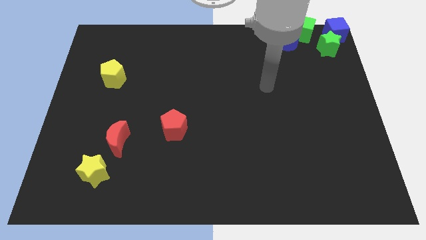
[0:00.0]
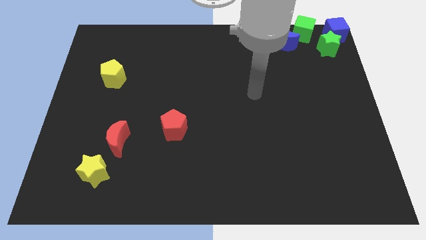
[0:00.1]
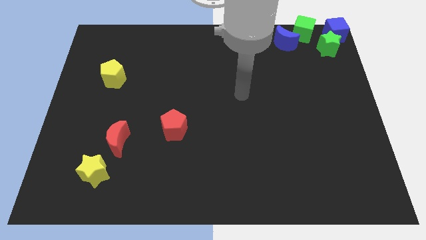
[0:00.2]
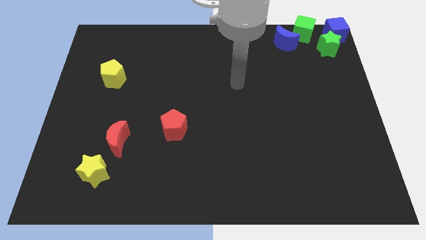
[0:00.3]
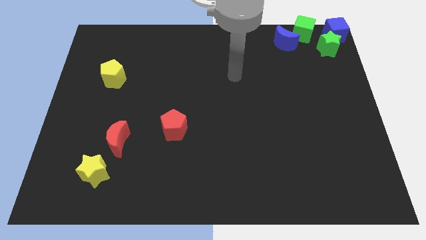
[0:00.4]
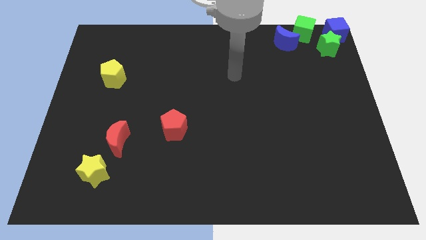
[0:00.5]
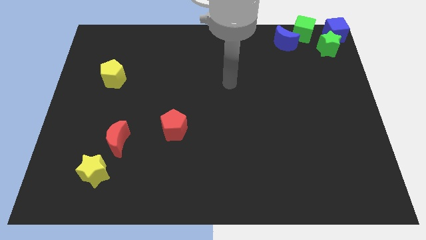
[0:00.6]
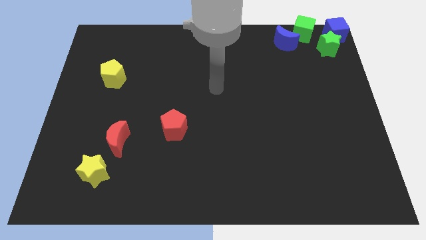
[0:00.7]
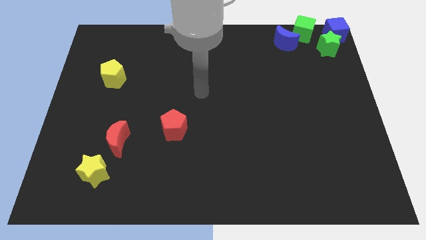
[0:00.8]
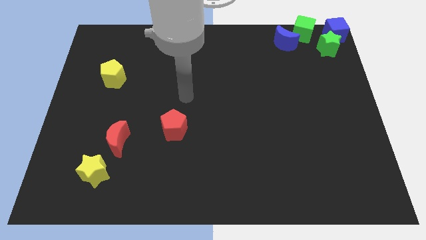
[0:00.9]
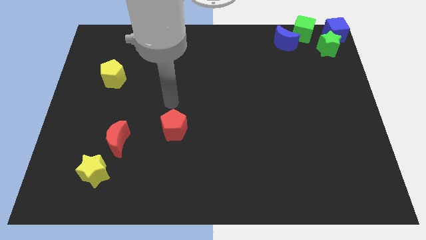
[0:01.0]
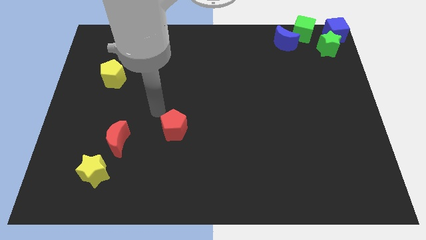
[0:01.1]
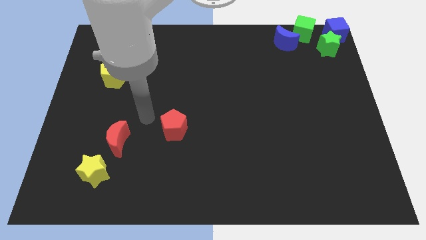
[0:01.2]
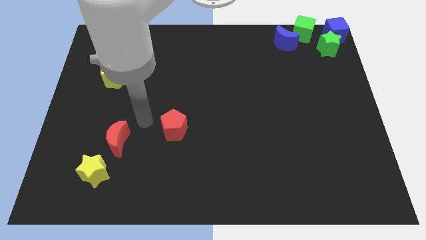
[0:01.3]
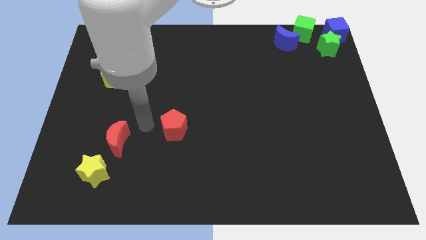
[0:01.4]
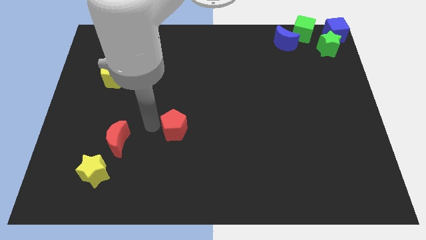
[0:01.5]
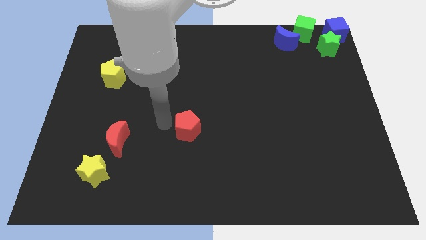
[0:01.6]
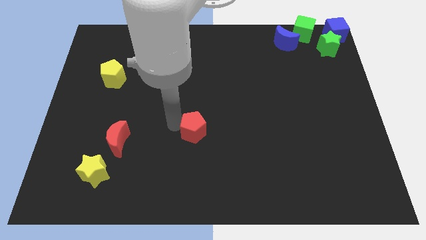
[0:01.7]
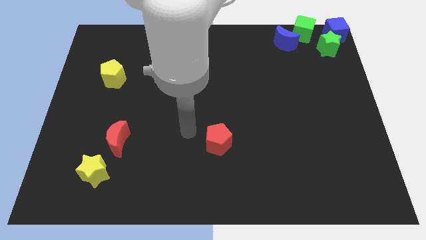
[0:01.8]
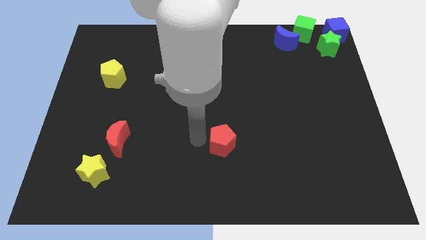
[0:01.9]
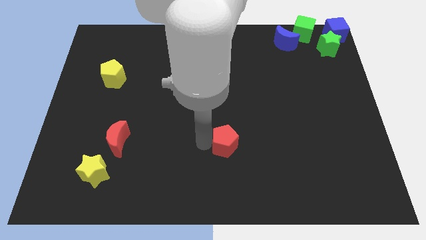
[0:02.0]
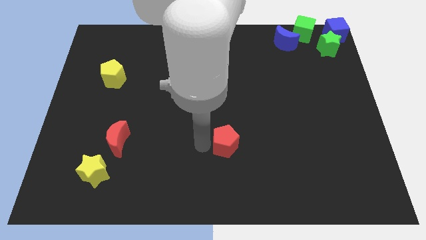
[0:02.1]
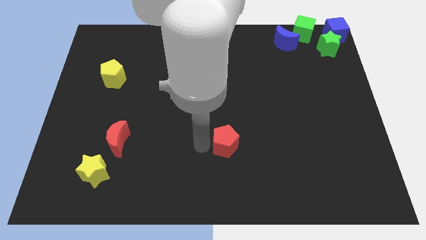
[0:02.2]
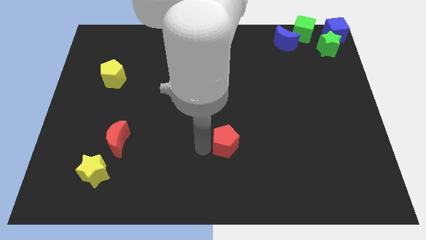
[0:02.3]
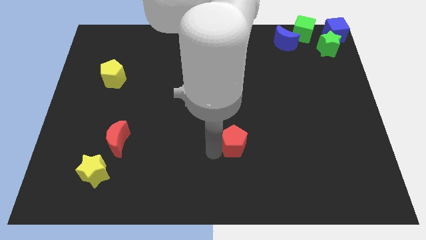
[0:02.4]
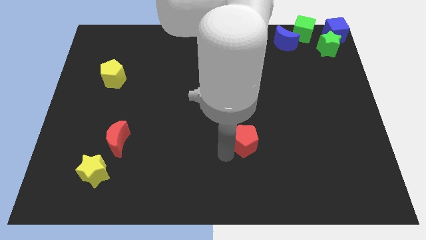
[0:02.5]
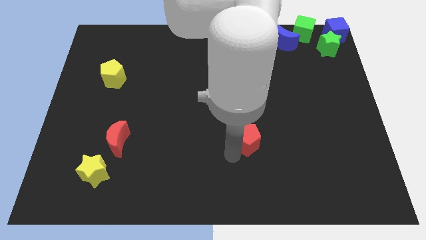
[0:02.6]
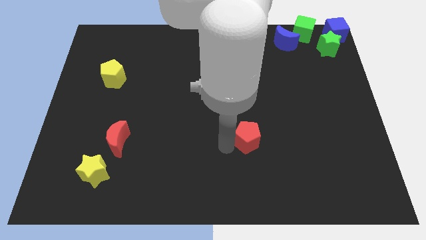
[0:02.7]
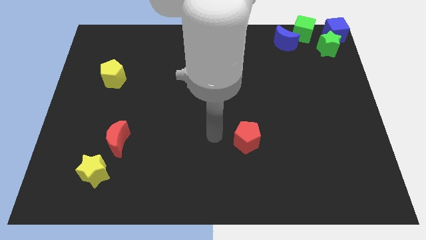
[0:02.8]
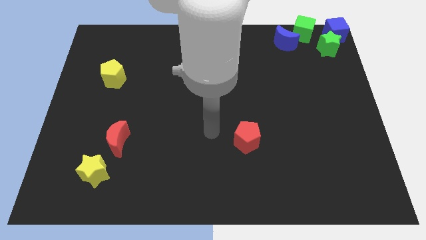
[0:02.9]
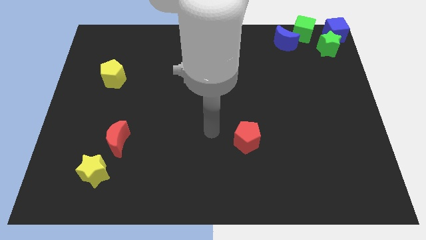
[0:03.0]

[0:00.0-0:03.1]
slide the red pentagon parallel to red moon

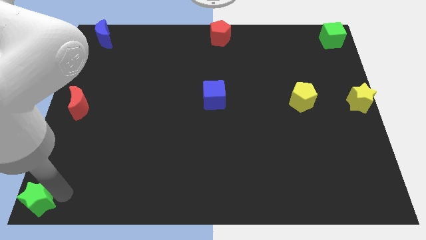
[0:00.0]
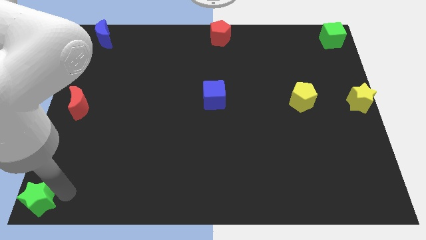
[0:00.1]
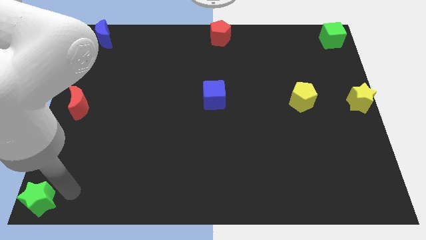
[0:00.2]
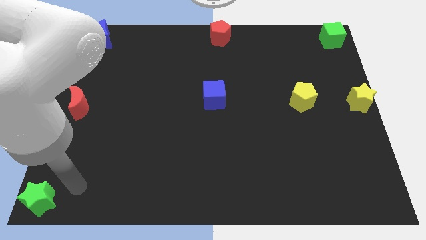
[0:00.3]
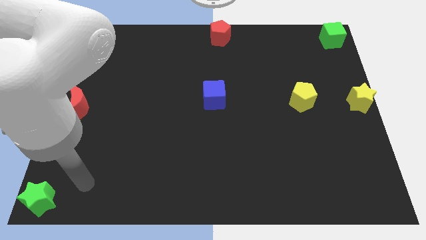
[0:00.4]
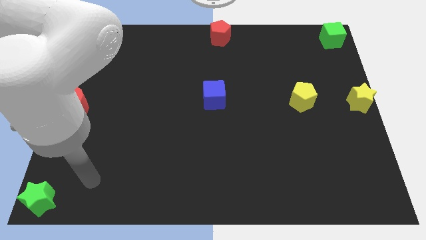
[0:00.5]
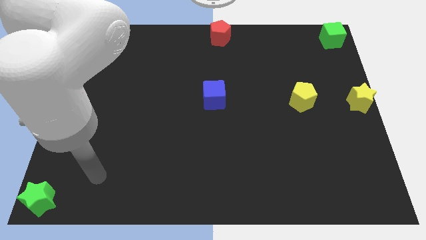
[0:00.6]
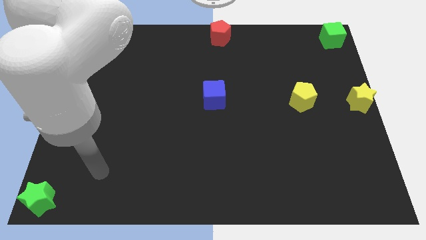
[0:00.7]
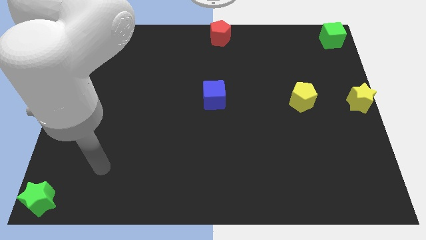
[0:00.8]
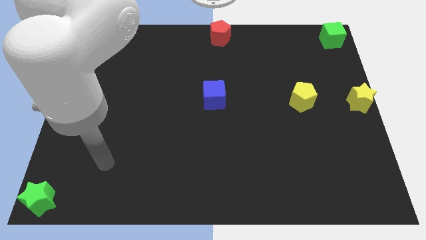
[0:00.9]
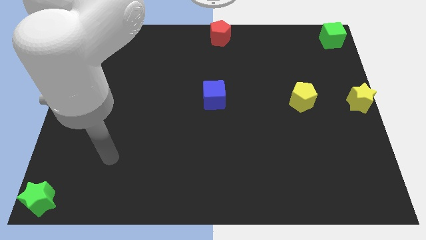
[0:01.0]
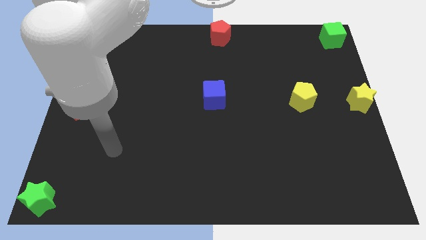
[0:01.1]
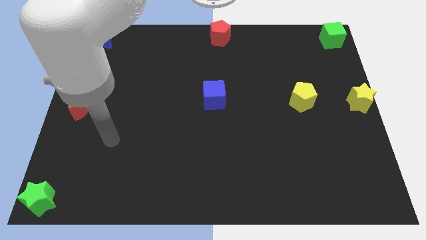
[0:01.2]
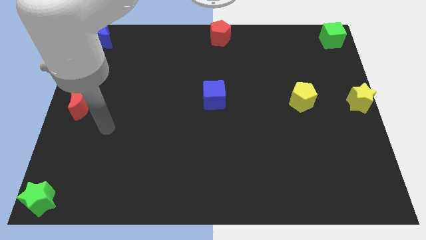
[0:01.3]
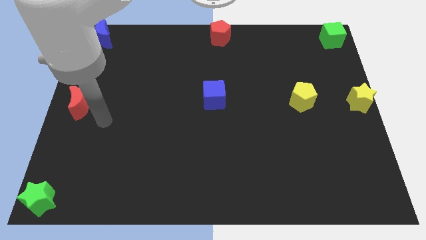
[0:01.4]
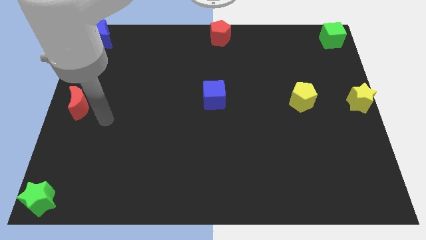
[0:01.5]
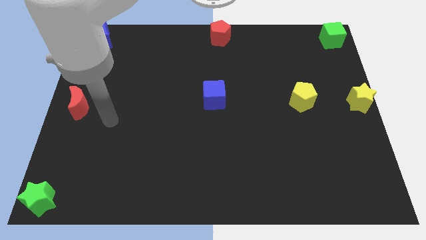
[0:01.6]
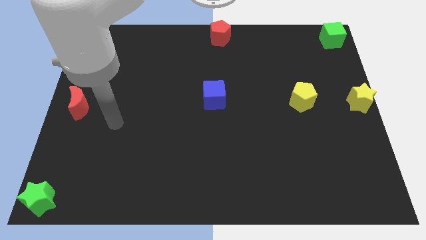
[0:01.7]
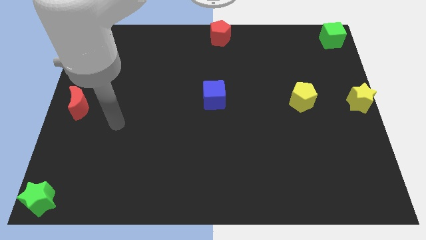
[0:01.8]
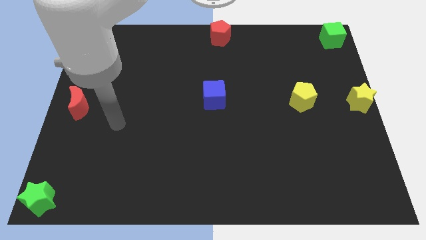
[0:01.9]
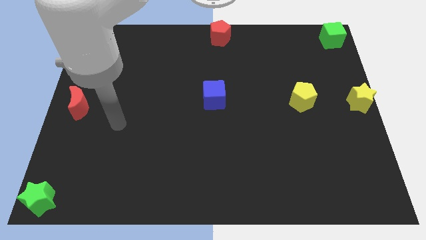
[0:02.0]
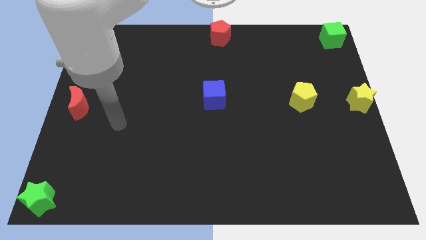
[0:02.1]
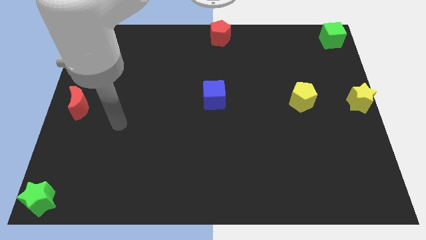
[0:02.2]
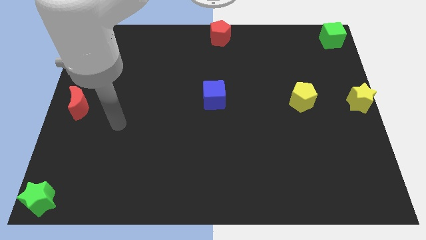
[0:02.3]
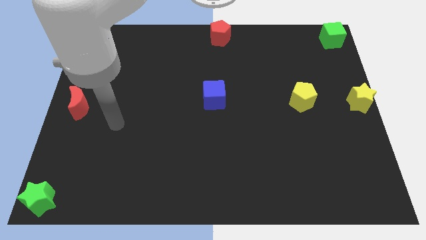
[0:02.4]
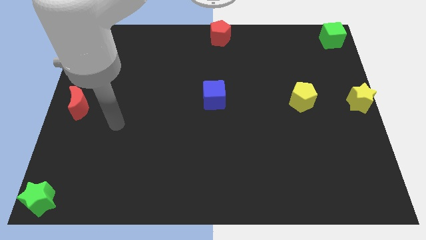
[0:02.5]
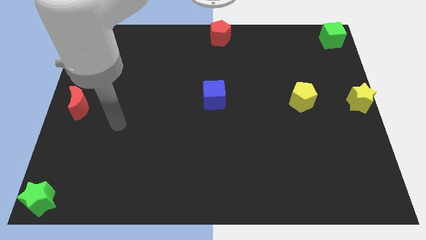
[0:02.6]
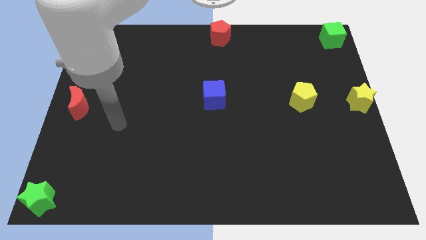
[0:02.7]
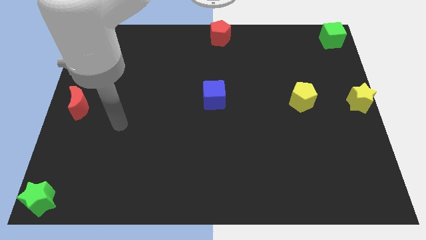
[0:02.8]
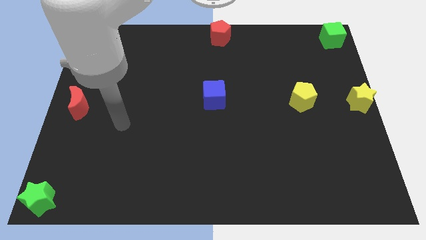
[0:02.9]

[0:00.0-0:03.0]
move the arm away from the green star

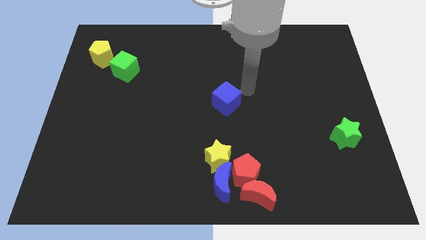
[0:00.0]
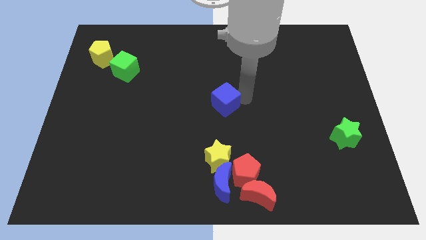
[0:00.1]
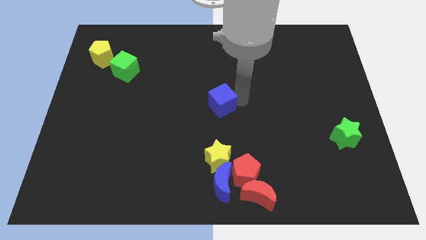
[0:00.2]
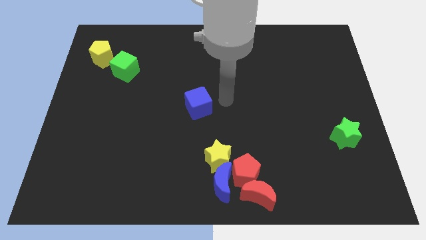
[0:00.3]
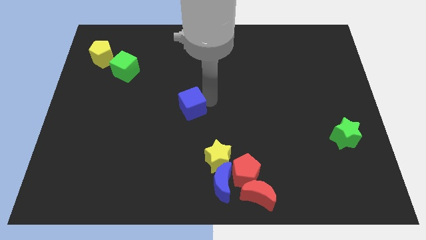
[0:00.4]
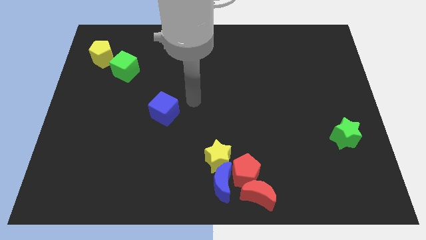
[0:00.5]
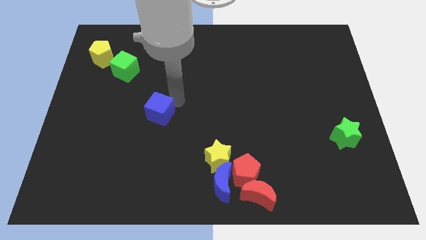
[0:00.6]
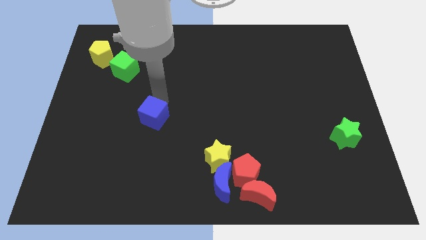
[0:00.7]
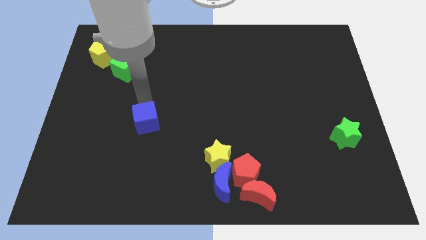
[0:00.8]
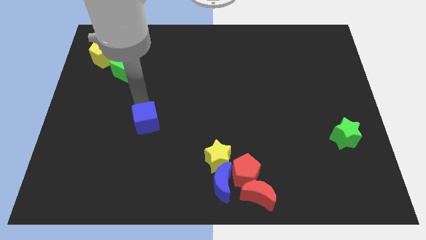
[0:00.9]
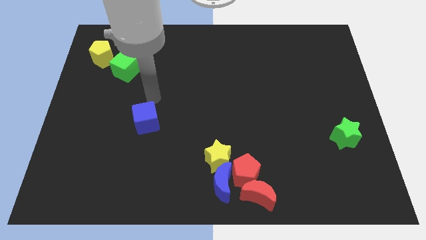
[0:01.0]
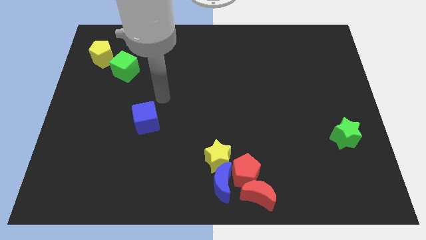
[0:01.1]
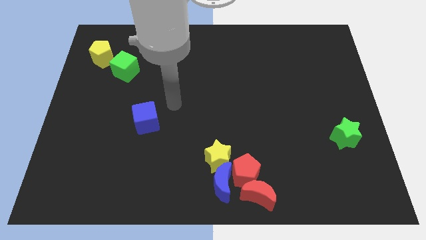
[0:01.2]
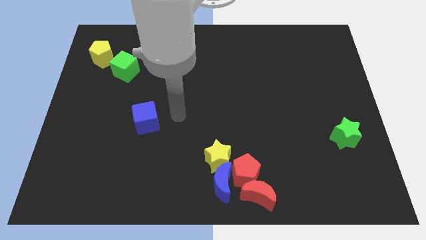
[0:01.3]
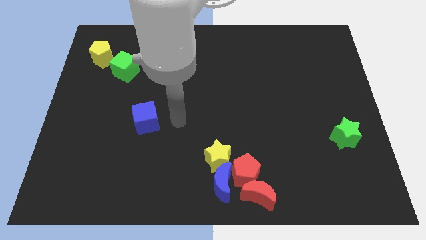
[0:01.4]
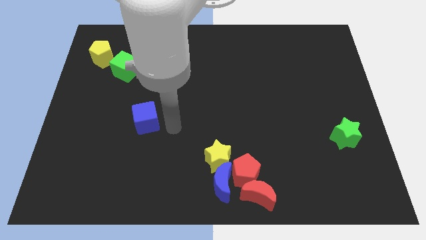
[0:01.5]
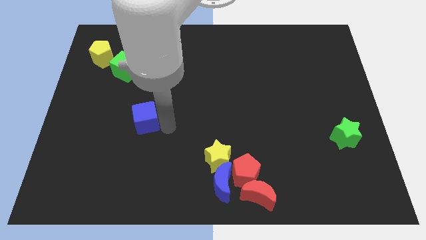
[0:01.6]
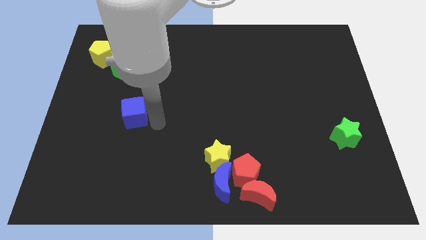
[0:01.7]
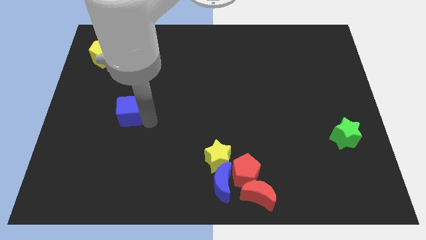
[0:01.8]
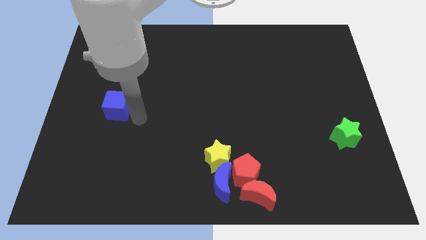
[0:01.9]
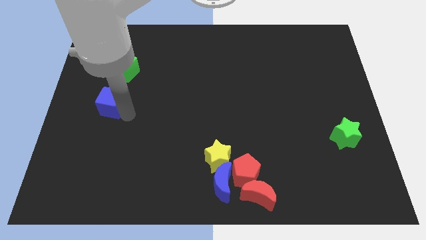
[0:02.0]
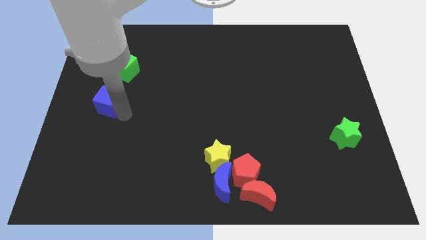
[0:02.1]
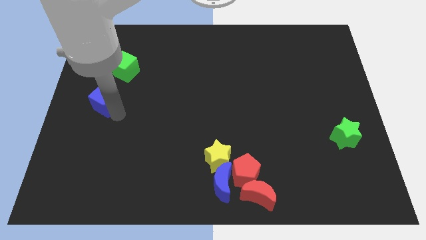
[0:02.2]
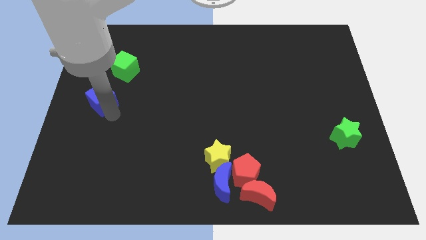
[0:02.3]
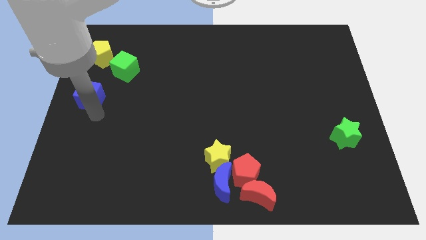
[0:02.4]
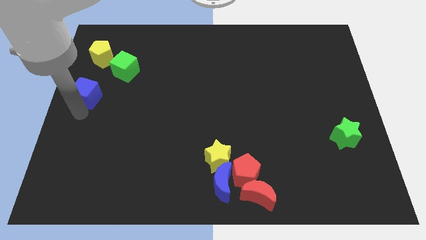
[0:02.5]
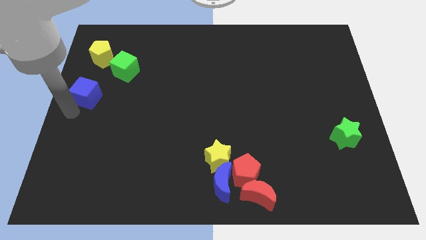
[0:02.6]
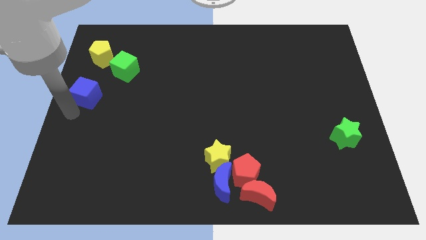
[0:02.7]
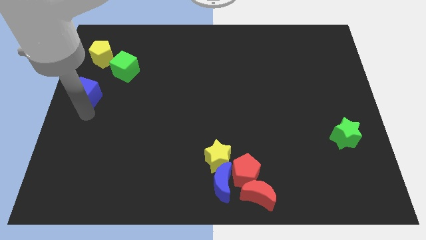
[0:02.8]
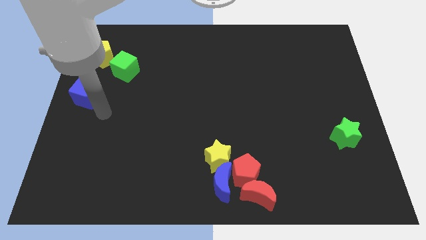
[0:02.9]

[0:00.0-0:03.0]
place the blue cube under the yellow pentagon
